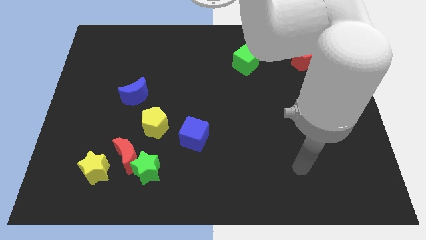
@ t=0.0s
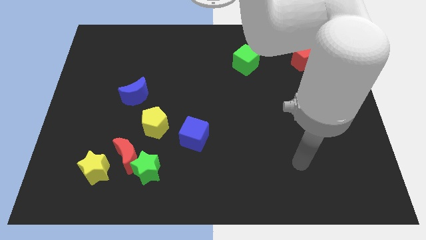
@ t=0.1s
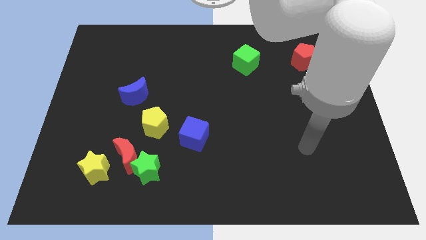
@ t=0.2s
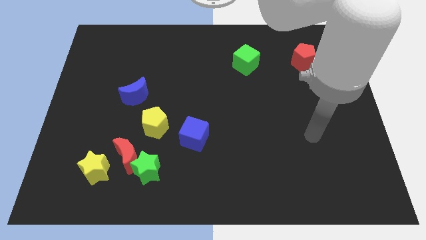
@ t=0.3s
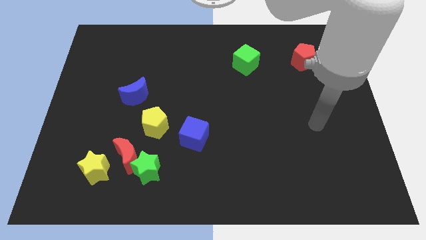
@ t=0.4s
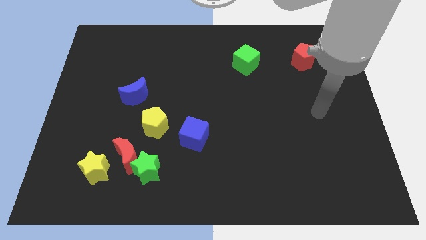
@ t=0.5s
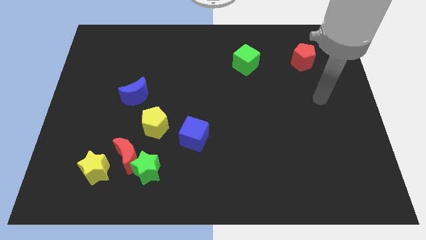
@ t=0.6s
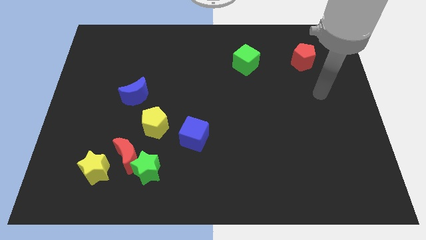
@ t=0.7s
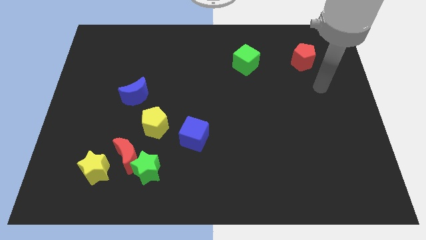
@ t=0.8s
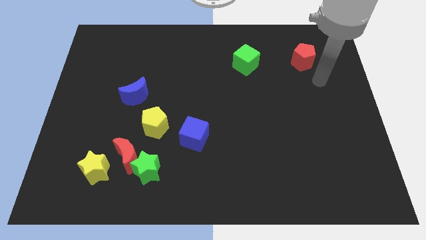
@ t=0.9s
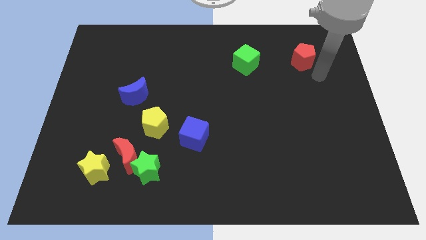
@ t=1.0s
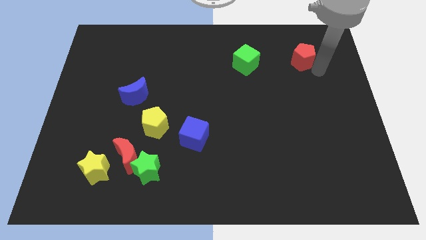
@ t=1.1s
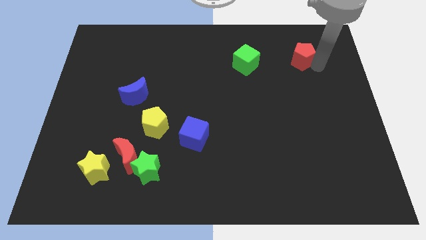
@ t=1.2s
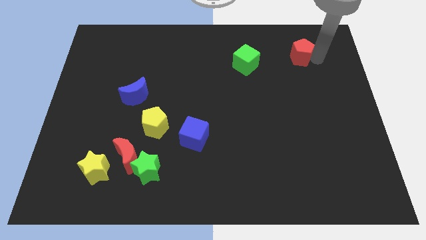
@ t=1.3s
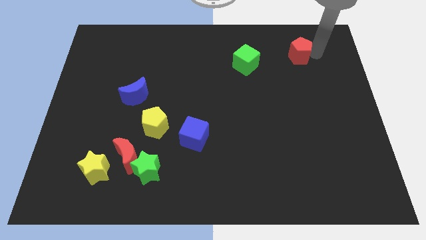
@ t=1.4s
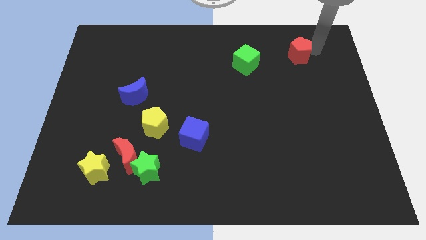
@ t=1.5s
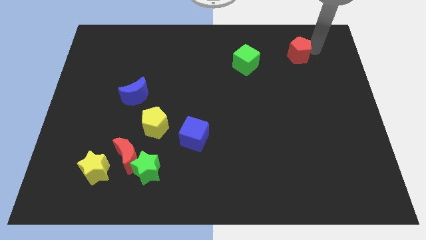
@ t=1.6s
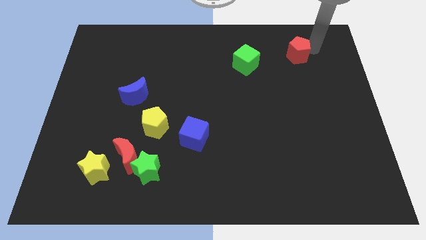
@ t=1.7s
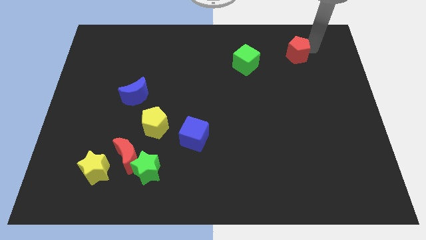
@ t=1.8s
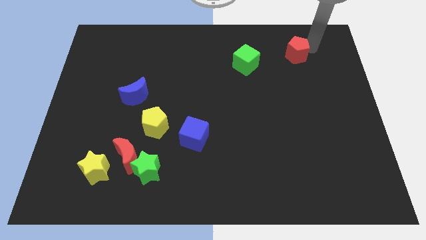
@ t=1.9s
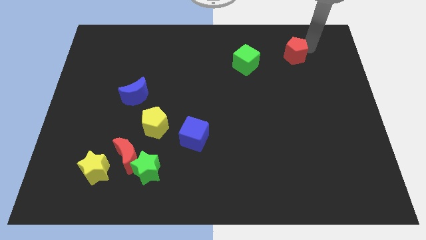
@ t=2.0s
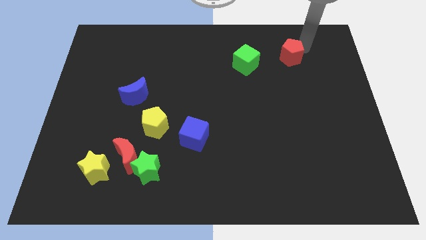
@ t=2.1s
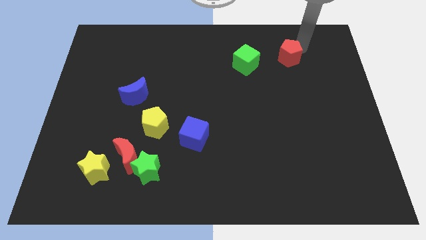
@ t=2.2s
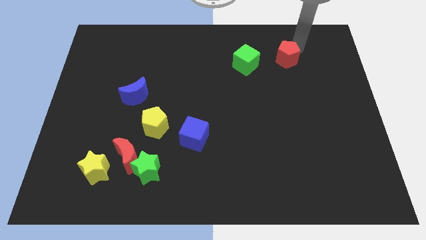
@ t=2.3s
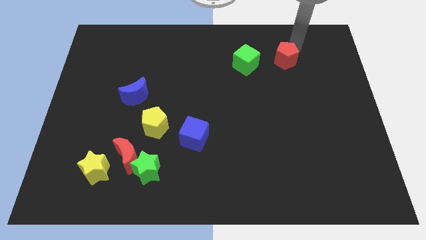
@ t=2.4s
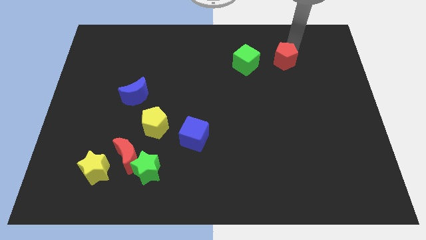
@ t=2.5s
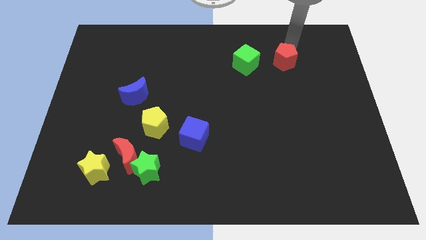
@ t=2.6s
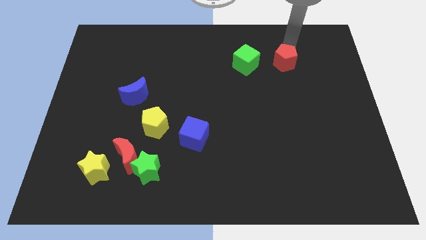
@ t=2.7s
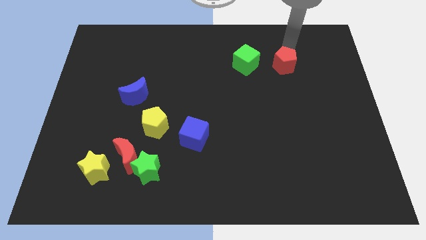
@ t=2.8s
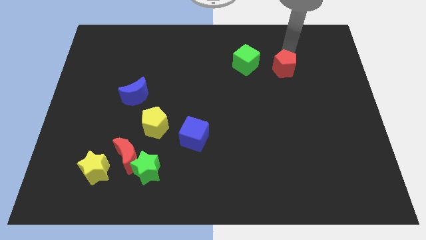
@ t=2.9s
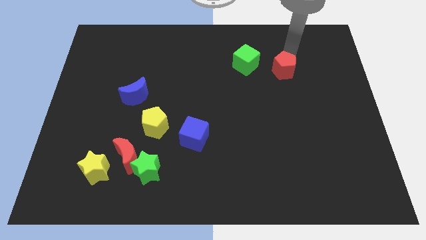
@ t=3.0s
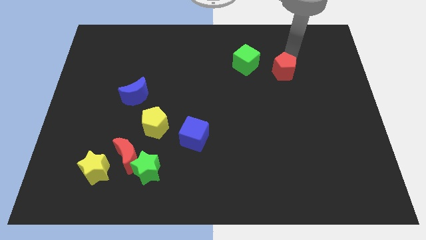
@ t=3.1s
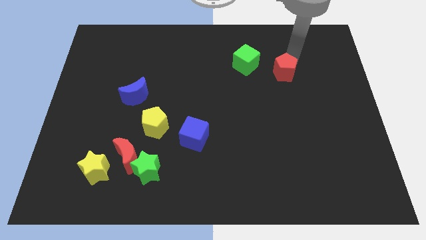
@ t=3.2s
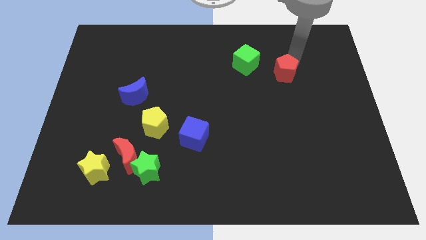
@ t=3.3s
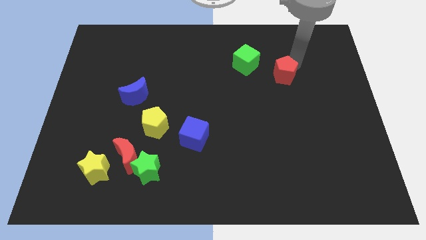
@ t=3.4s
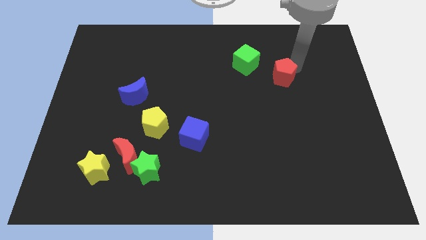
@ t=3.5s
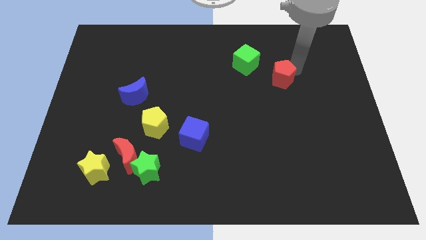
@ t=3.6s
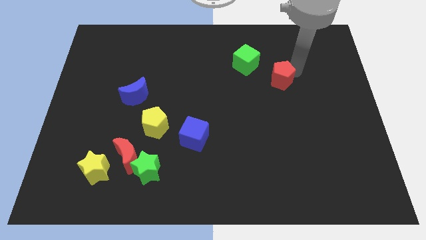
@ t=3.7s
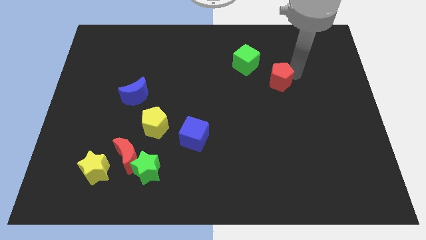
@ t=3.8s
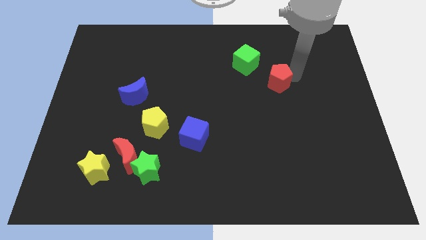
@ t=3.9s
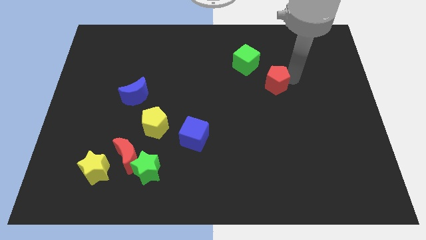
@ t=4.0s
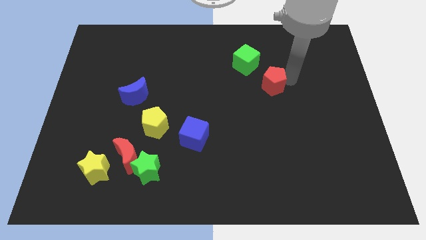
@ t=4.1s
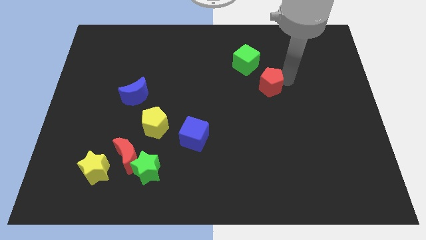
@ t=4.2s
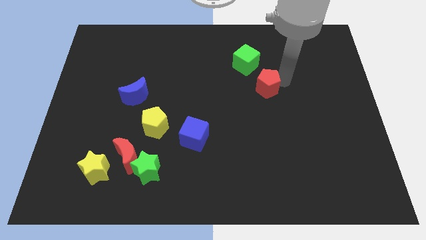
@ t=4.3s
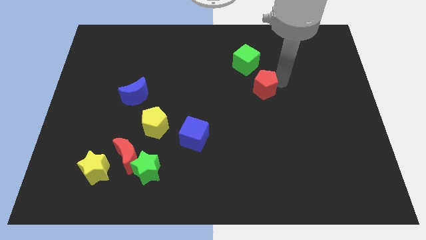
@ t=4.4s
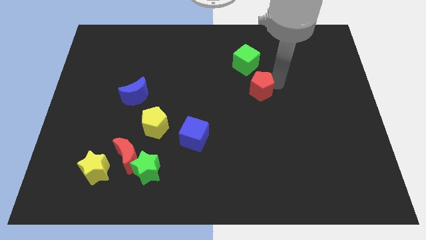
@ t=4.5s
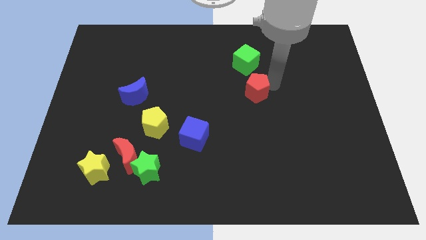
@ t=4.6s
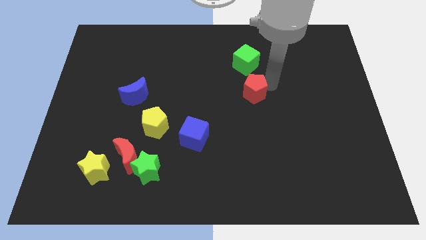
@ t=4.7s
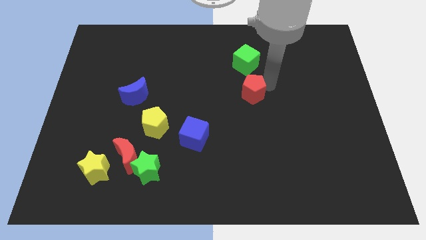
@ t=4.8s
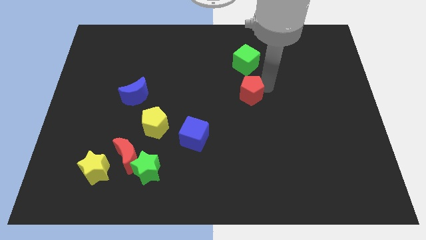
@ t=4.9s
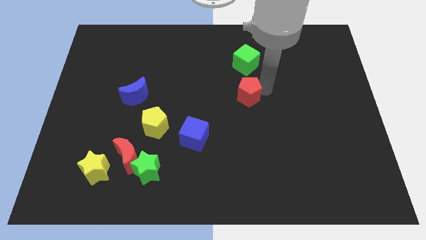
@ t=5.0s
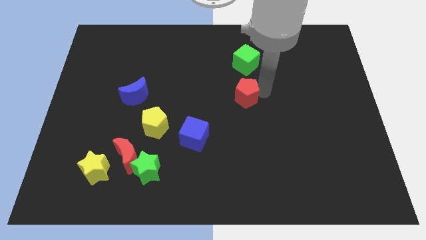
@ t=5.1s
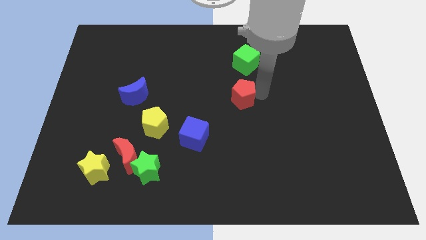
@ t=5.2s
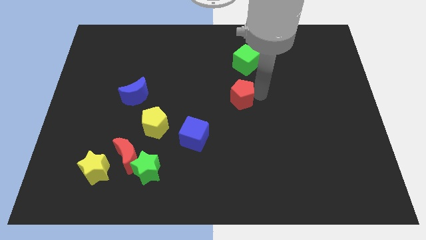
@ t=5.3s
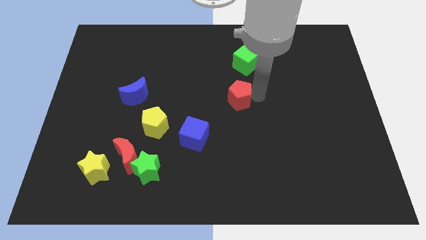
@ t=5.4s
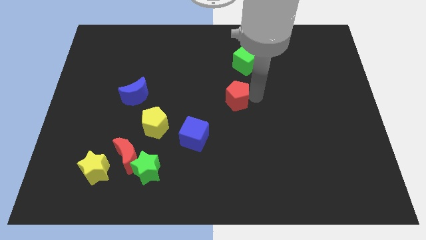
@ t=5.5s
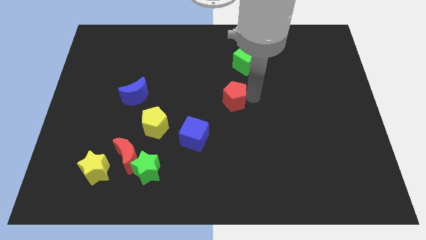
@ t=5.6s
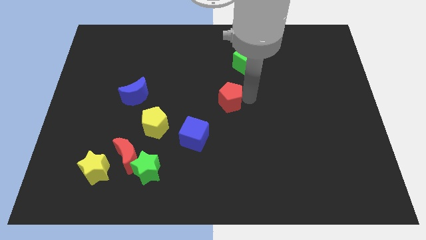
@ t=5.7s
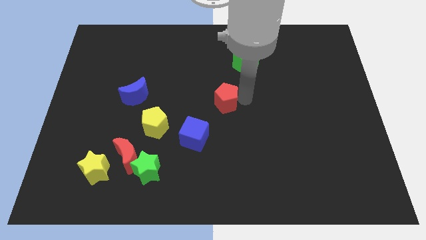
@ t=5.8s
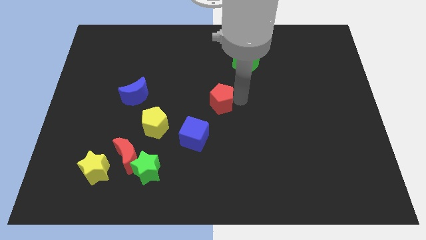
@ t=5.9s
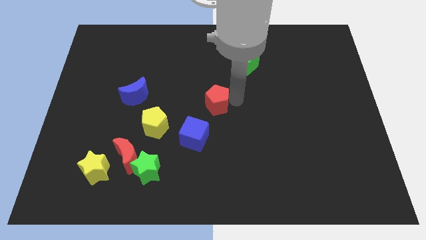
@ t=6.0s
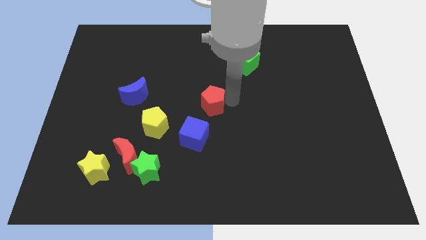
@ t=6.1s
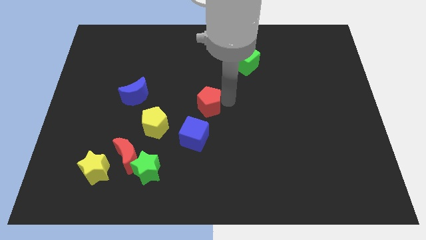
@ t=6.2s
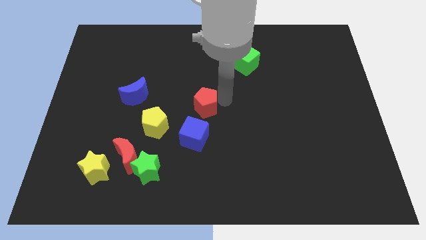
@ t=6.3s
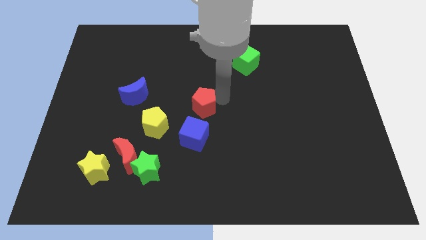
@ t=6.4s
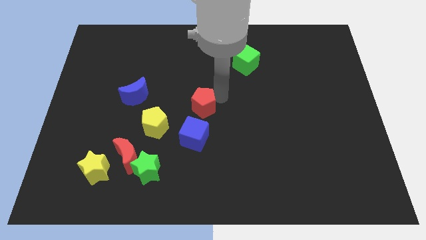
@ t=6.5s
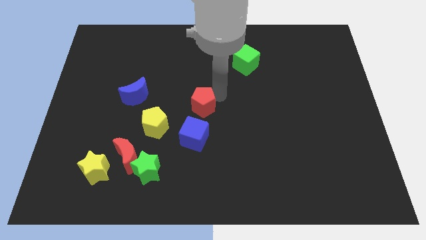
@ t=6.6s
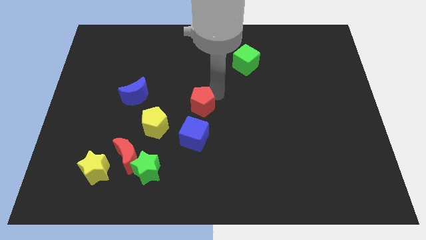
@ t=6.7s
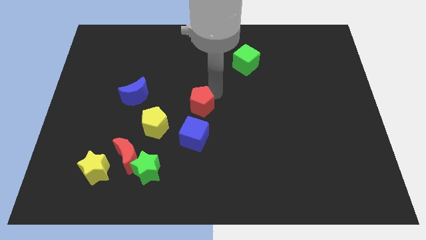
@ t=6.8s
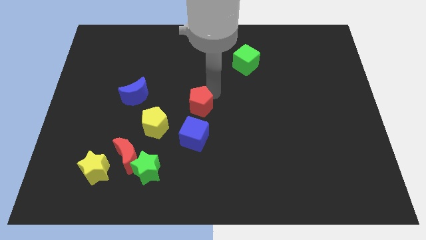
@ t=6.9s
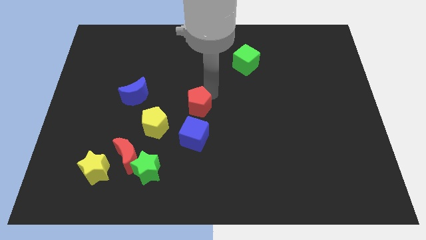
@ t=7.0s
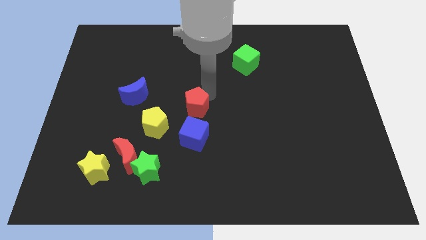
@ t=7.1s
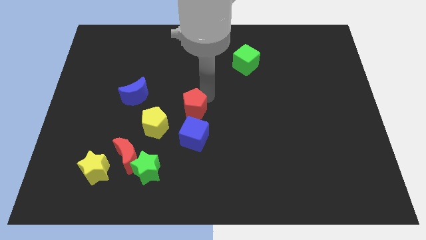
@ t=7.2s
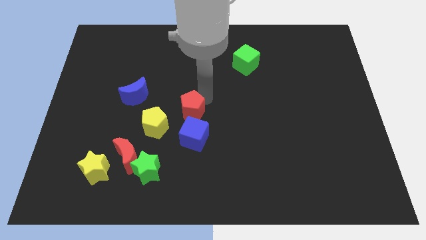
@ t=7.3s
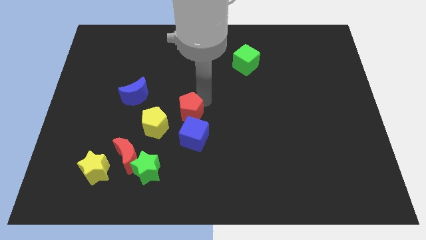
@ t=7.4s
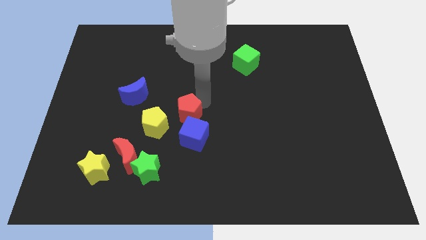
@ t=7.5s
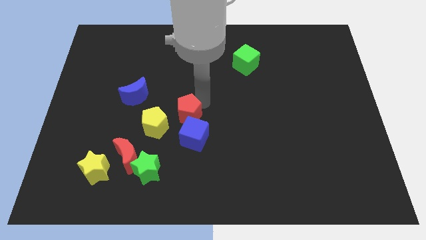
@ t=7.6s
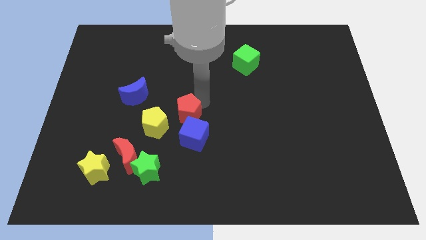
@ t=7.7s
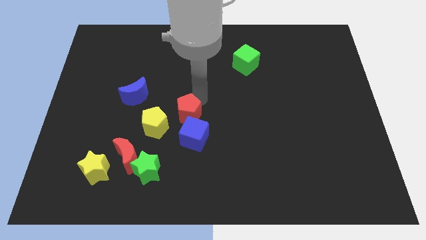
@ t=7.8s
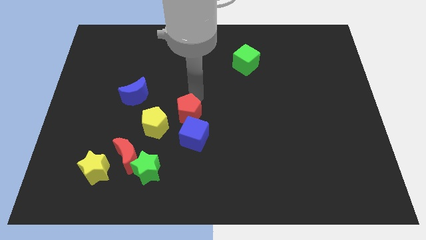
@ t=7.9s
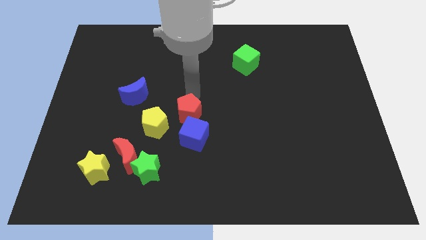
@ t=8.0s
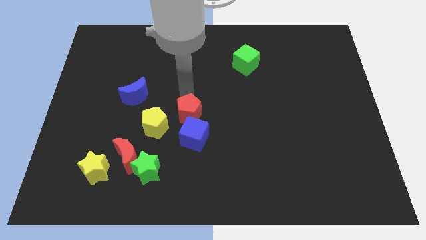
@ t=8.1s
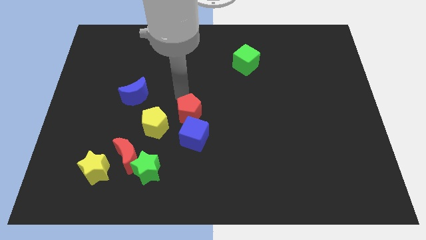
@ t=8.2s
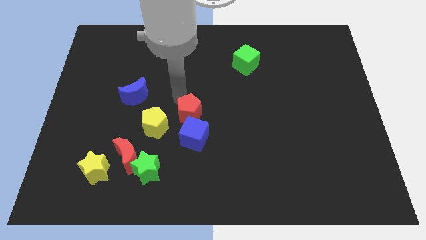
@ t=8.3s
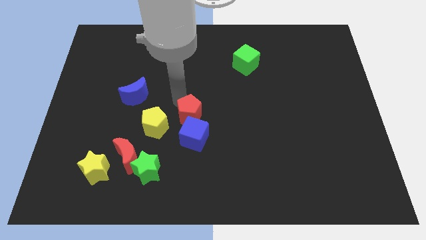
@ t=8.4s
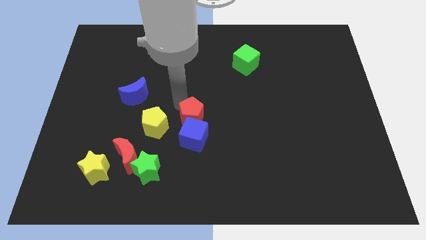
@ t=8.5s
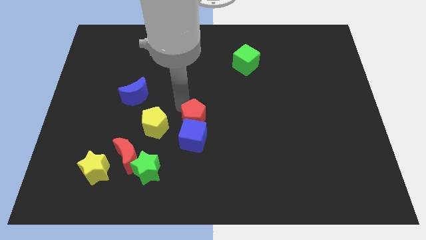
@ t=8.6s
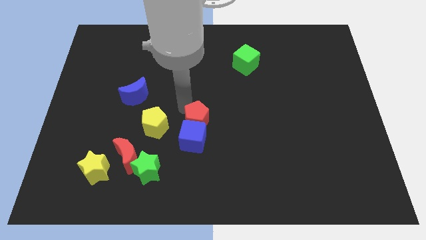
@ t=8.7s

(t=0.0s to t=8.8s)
move the red pentagon to the blue cube
